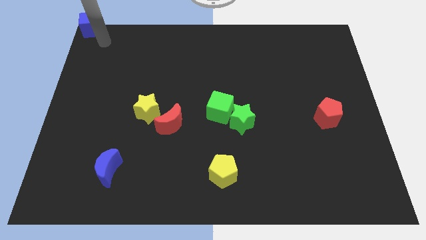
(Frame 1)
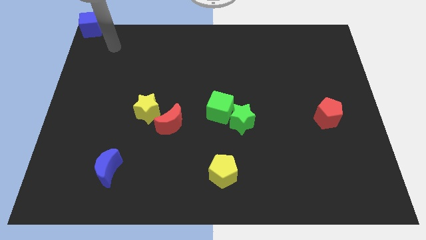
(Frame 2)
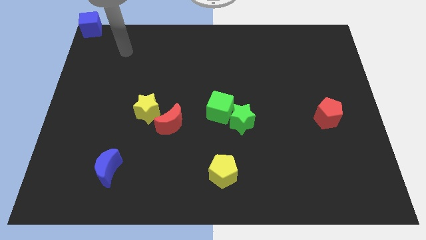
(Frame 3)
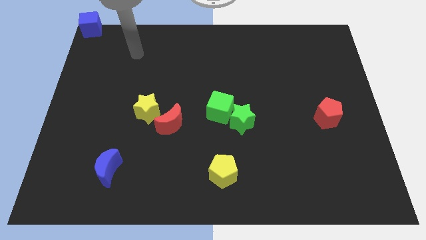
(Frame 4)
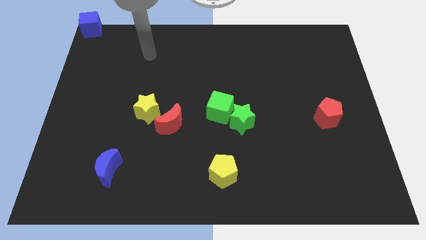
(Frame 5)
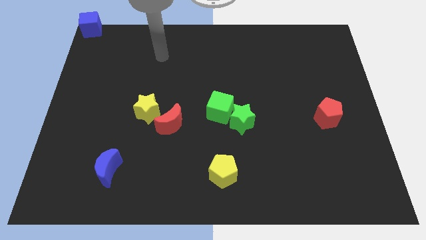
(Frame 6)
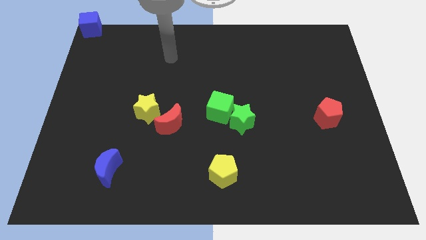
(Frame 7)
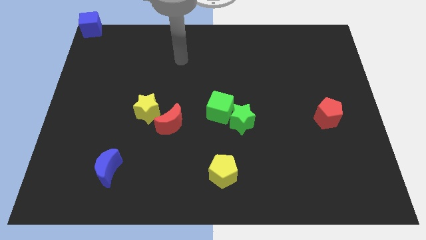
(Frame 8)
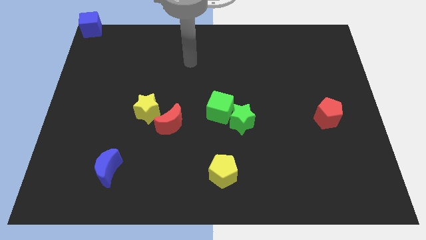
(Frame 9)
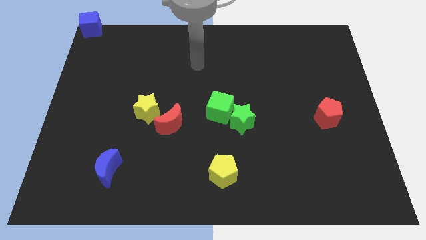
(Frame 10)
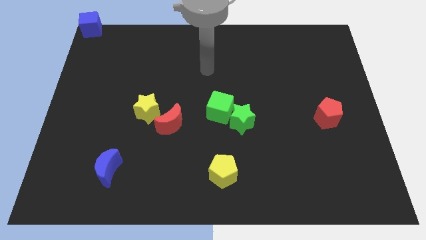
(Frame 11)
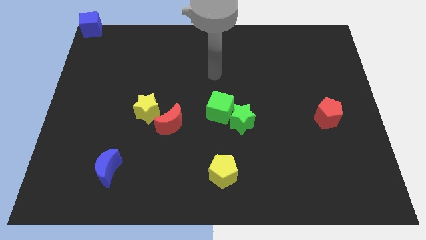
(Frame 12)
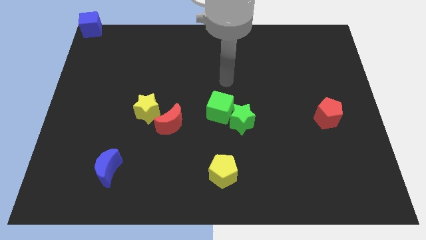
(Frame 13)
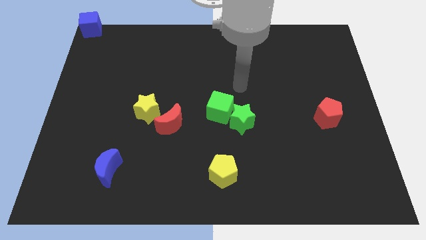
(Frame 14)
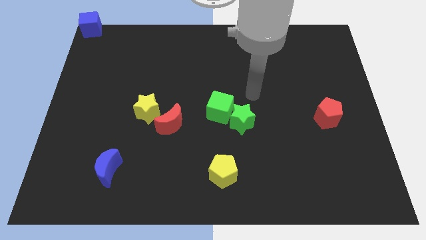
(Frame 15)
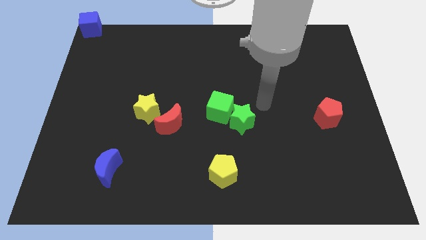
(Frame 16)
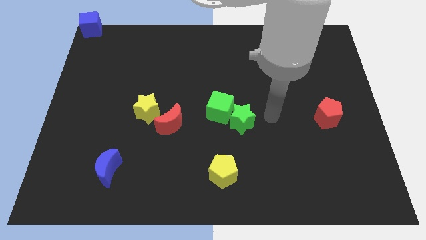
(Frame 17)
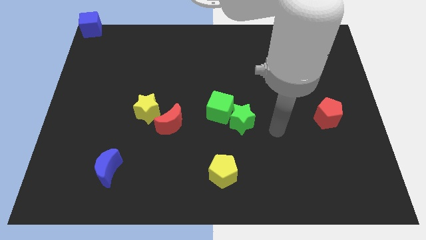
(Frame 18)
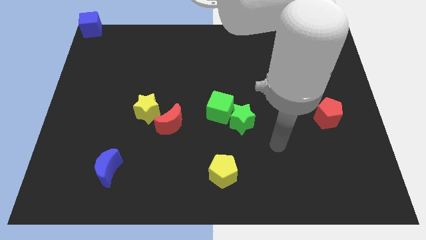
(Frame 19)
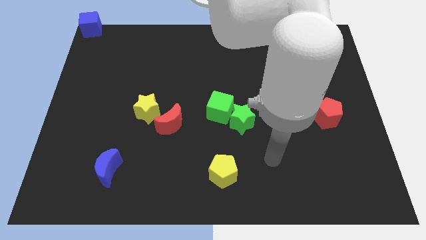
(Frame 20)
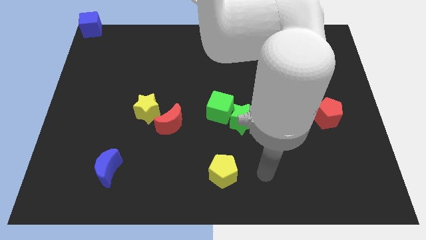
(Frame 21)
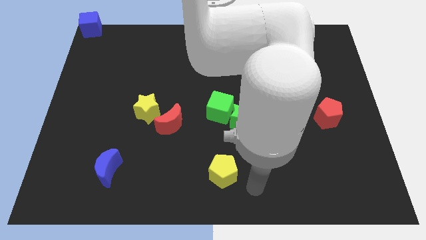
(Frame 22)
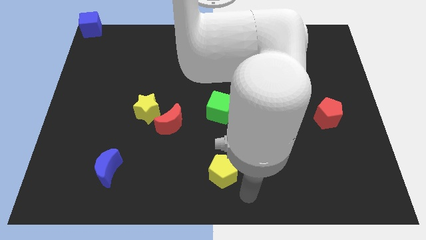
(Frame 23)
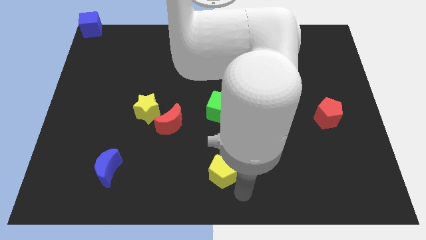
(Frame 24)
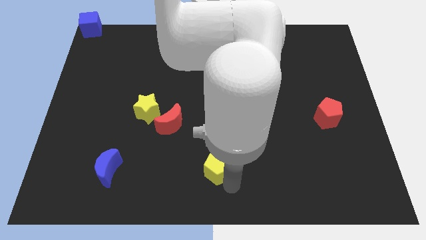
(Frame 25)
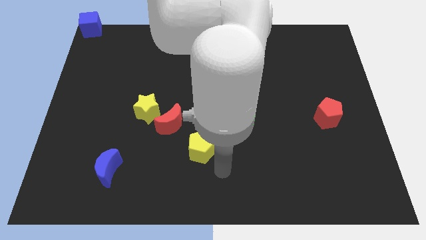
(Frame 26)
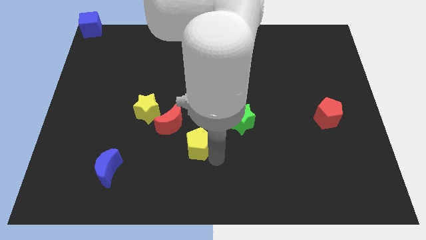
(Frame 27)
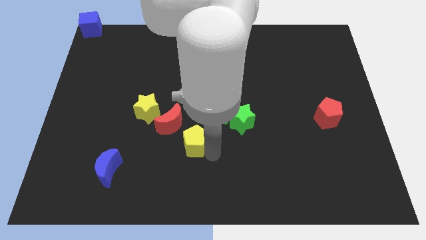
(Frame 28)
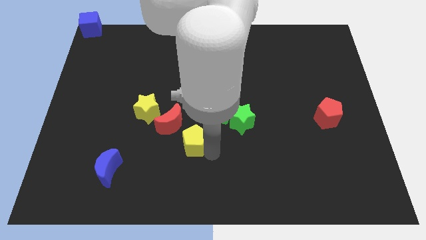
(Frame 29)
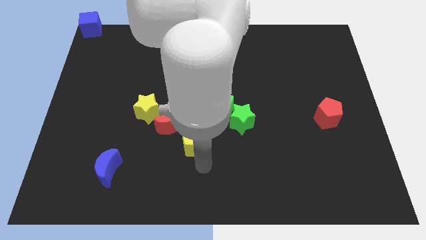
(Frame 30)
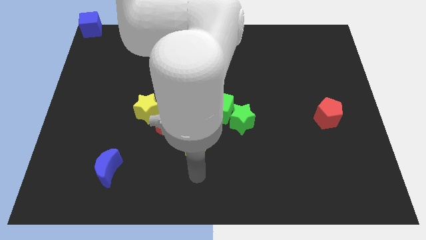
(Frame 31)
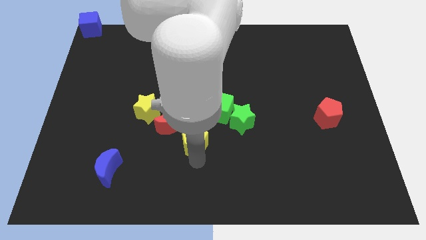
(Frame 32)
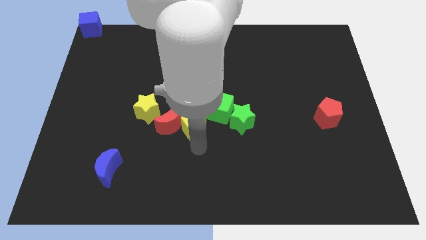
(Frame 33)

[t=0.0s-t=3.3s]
move the yellow pentagon to the bottom right side of the red crescent

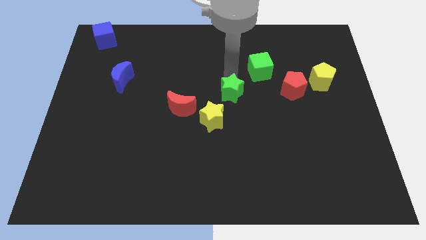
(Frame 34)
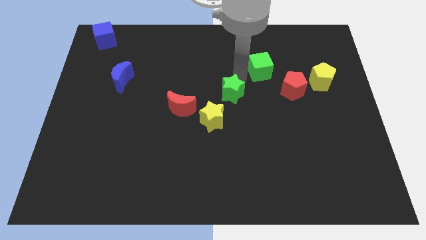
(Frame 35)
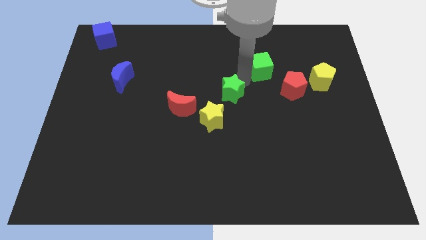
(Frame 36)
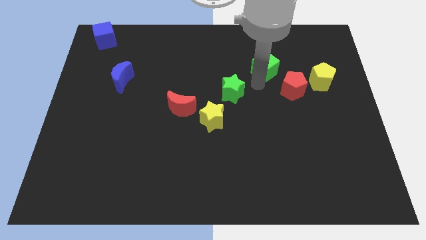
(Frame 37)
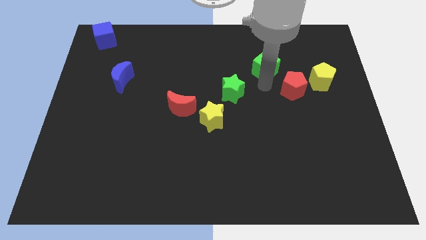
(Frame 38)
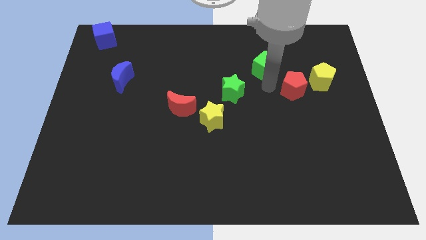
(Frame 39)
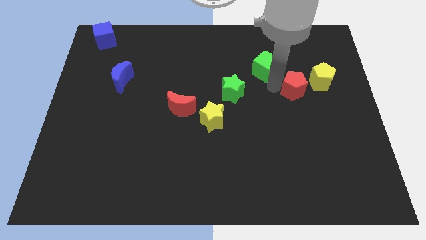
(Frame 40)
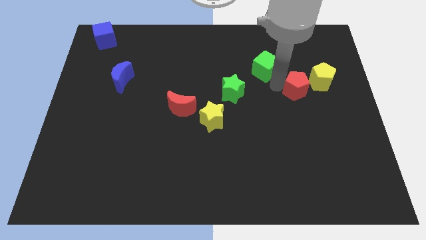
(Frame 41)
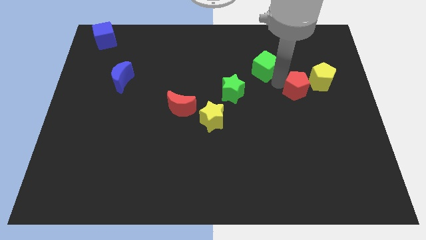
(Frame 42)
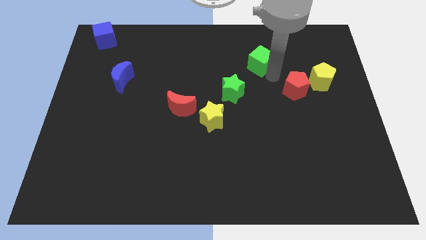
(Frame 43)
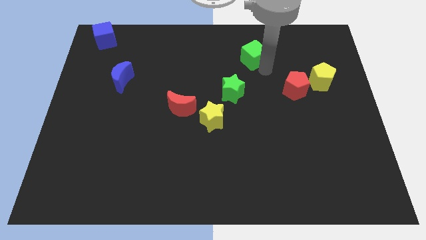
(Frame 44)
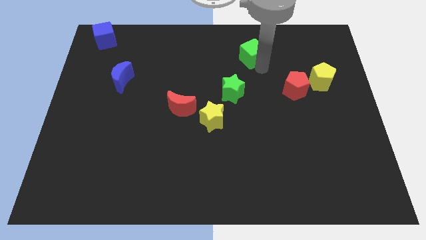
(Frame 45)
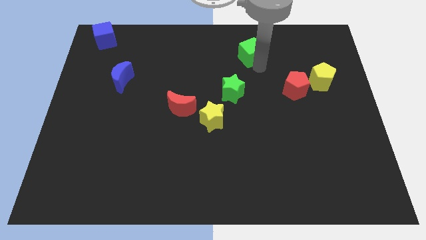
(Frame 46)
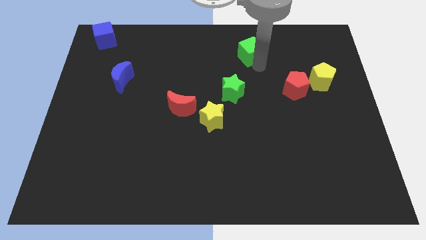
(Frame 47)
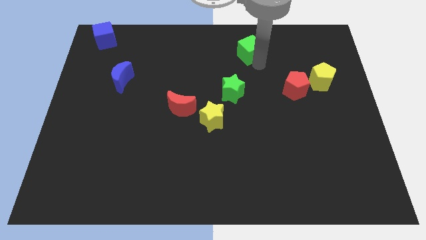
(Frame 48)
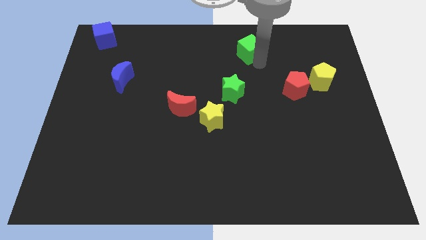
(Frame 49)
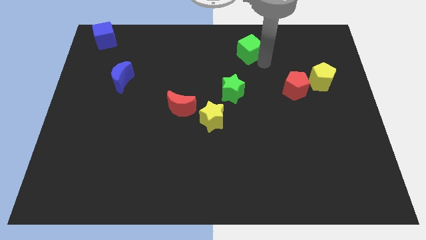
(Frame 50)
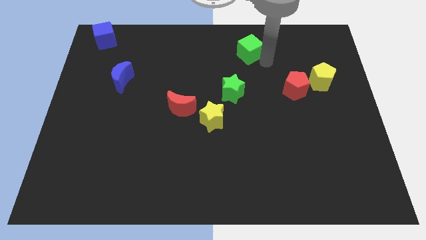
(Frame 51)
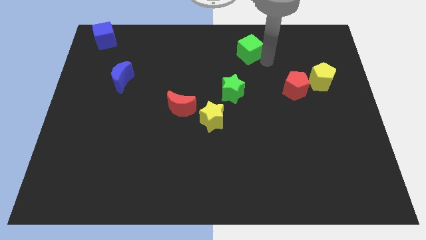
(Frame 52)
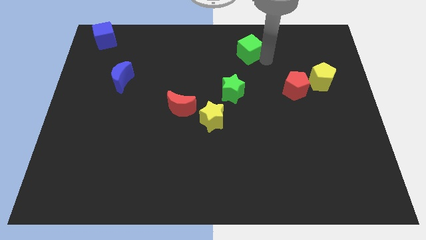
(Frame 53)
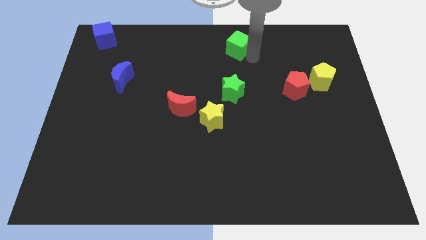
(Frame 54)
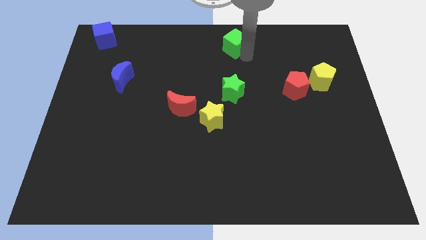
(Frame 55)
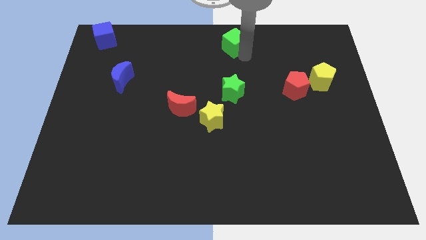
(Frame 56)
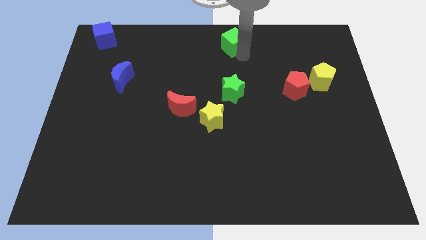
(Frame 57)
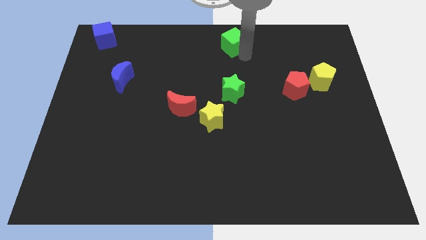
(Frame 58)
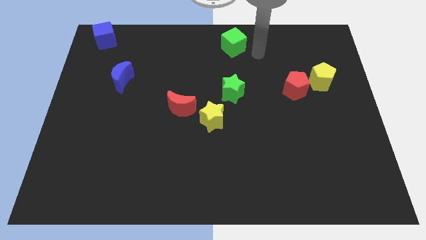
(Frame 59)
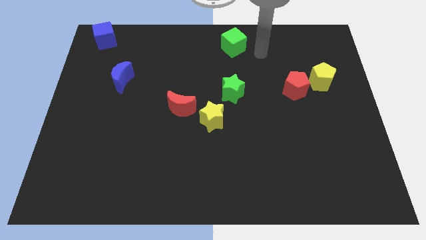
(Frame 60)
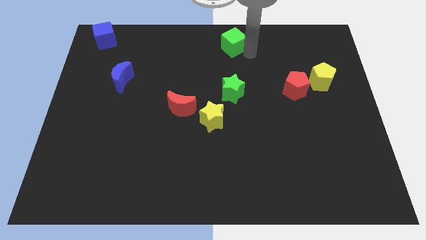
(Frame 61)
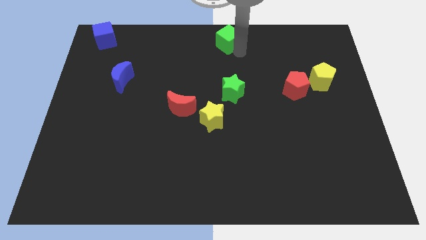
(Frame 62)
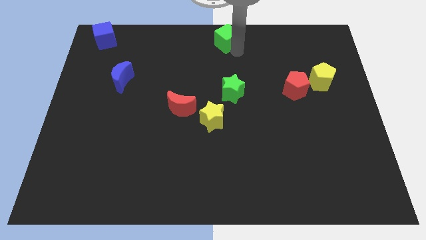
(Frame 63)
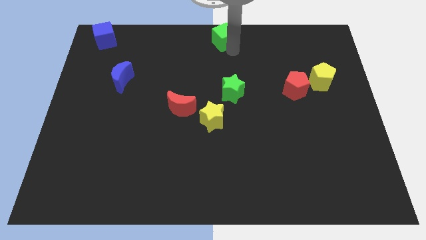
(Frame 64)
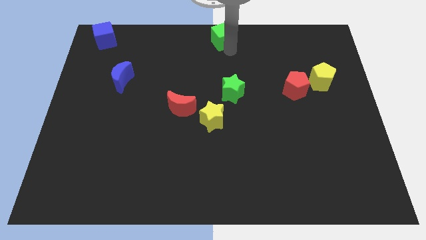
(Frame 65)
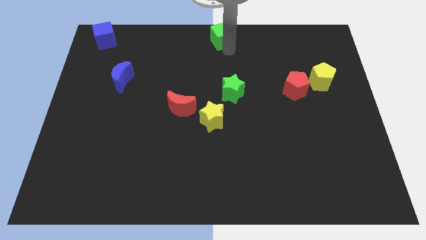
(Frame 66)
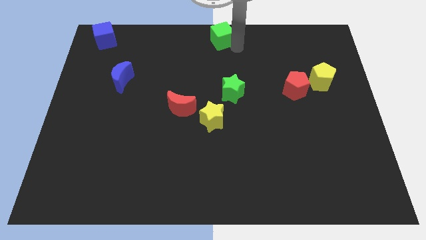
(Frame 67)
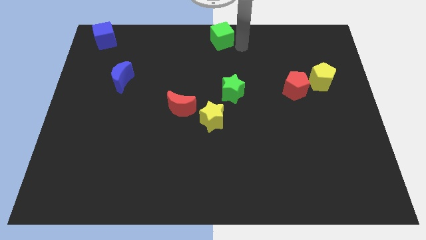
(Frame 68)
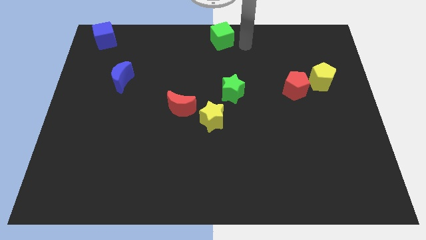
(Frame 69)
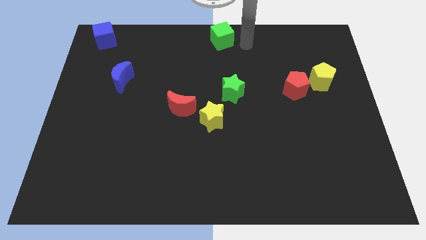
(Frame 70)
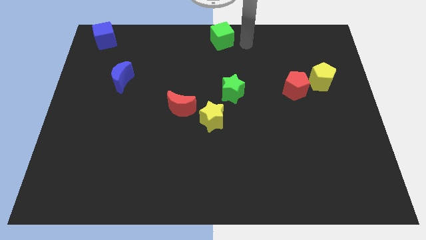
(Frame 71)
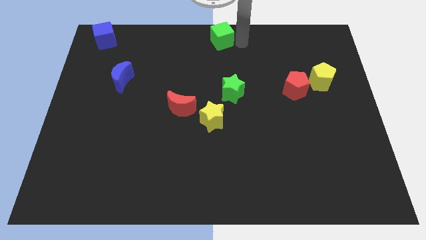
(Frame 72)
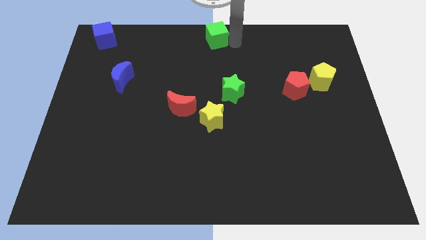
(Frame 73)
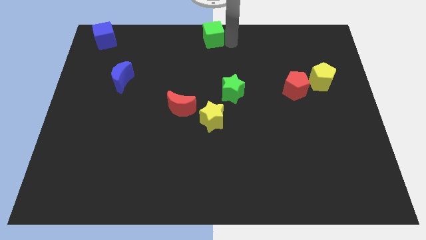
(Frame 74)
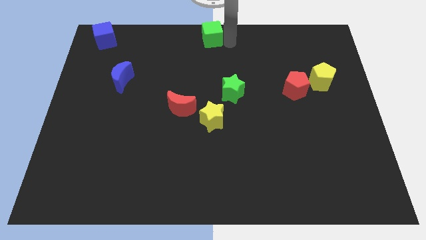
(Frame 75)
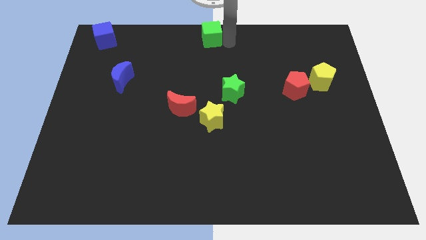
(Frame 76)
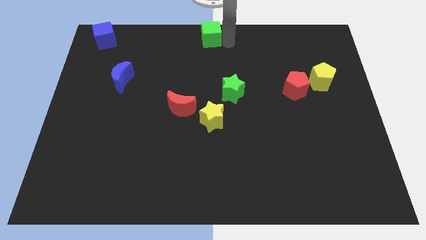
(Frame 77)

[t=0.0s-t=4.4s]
move the green cube to the top center of the board

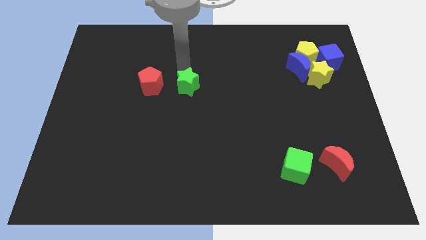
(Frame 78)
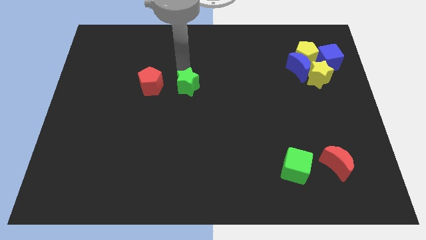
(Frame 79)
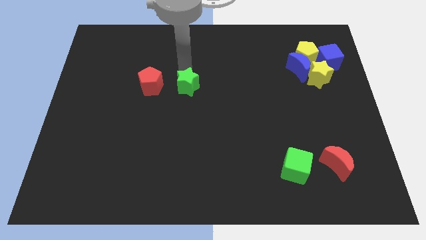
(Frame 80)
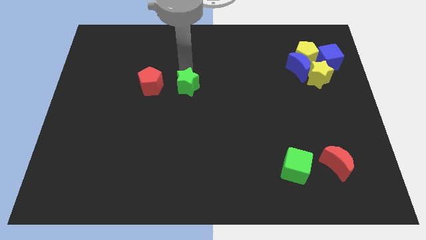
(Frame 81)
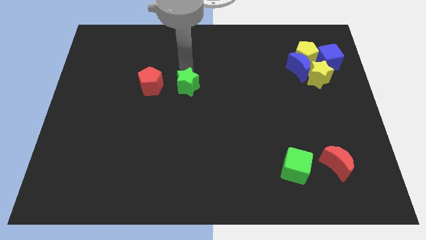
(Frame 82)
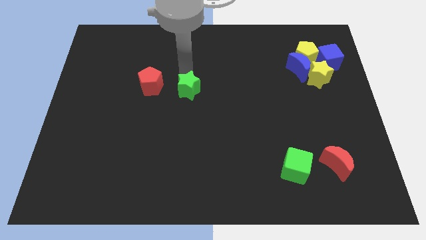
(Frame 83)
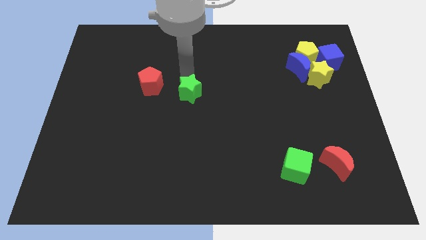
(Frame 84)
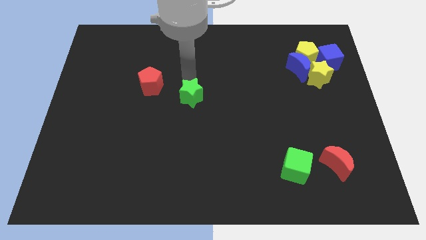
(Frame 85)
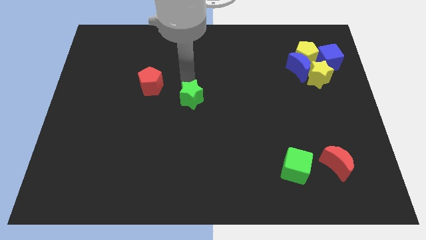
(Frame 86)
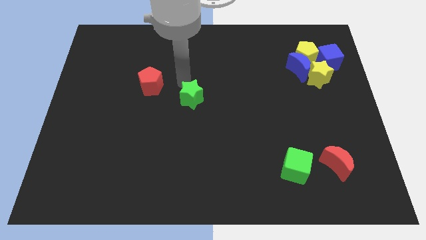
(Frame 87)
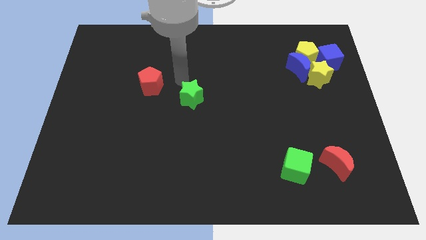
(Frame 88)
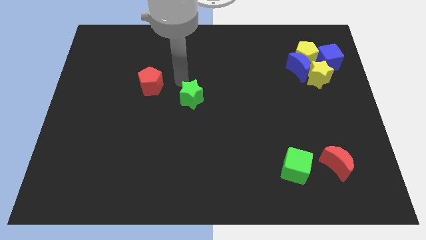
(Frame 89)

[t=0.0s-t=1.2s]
move the green star downwards slightly

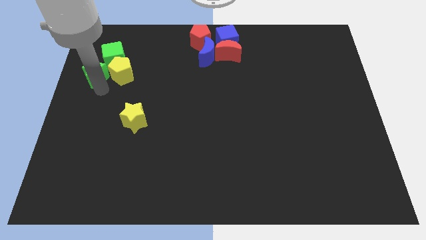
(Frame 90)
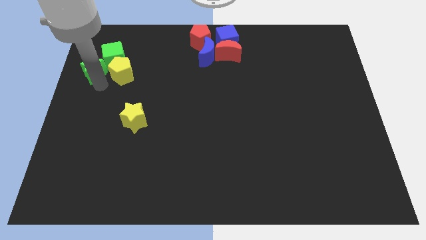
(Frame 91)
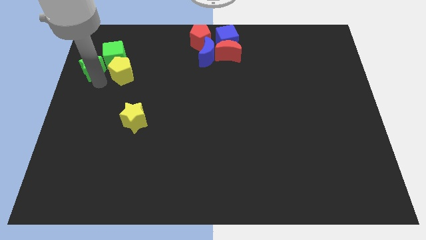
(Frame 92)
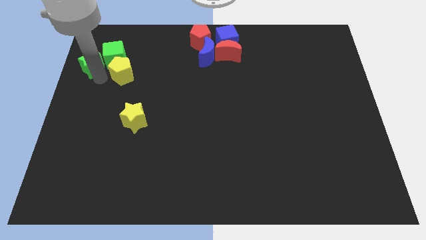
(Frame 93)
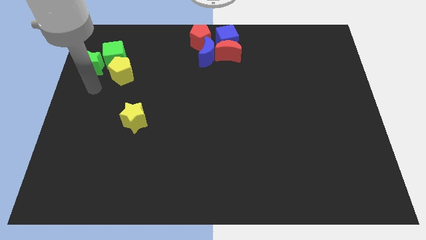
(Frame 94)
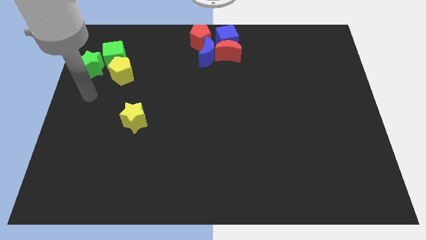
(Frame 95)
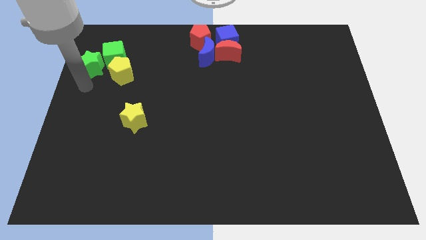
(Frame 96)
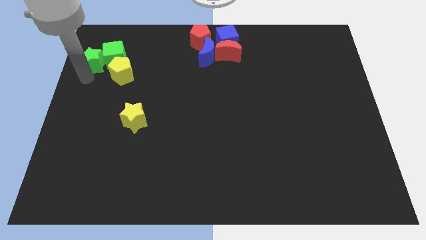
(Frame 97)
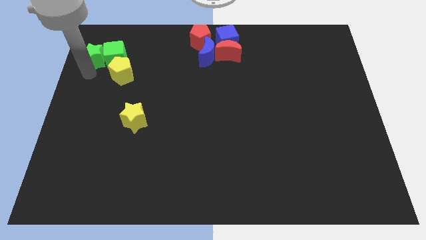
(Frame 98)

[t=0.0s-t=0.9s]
move the green star left to the green cube
